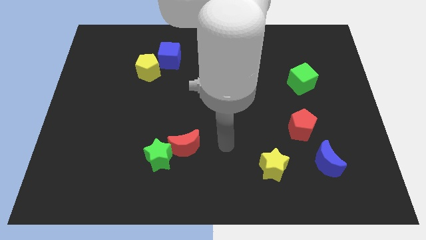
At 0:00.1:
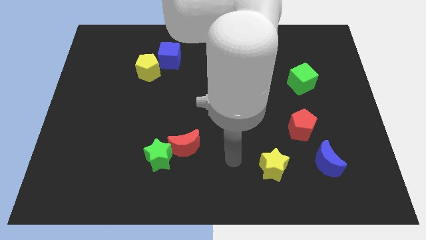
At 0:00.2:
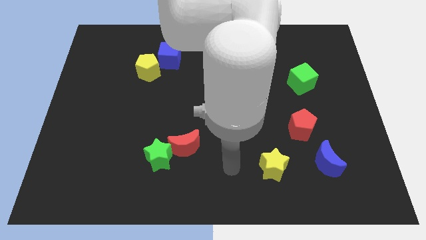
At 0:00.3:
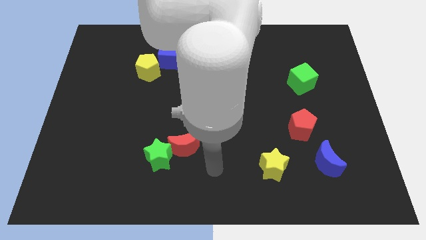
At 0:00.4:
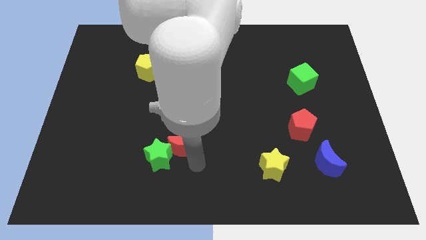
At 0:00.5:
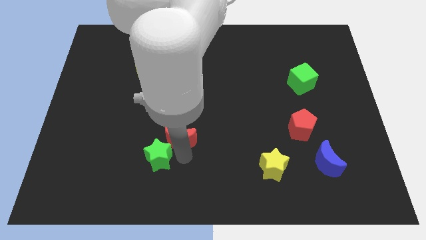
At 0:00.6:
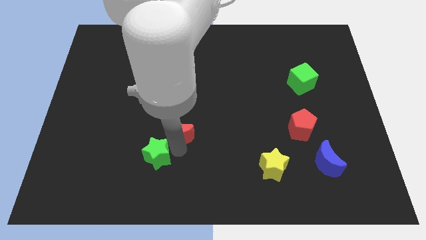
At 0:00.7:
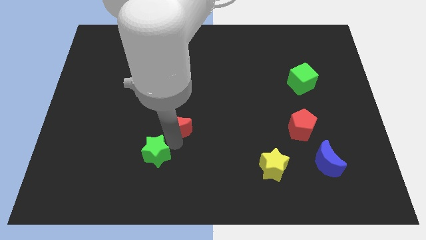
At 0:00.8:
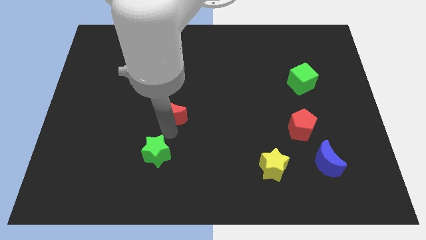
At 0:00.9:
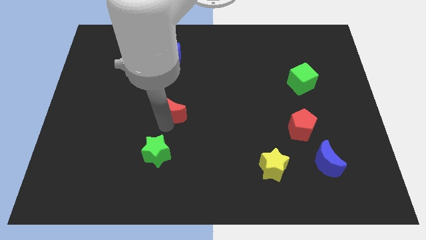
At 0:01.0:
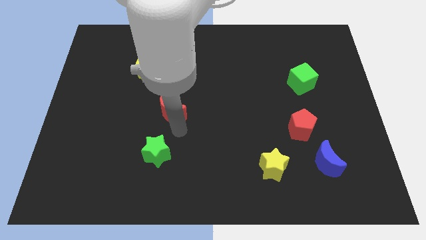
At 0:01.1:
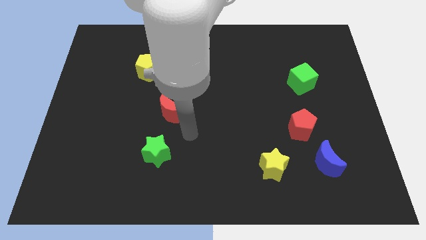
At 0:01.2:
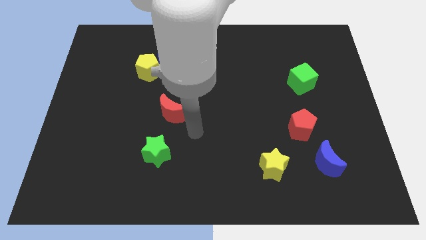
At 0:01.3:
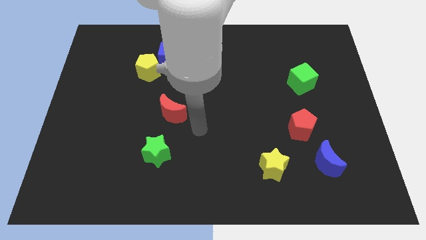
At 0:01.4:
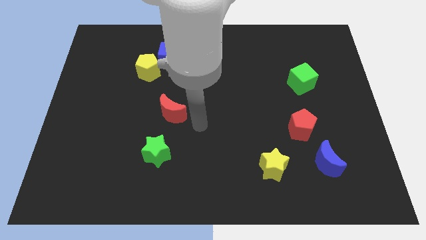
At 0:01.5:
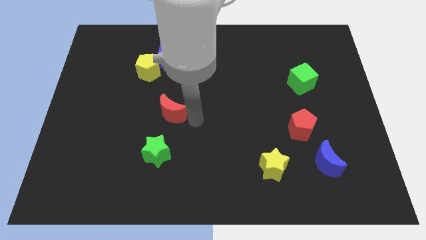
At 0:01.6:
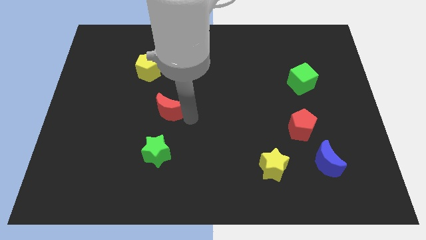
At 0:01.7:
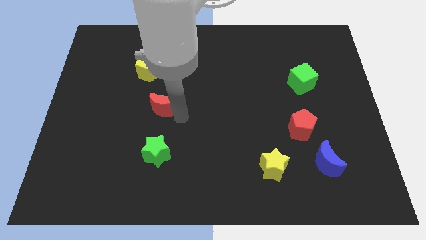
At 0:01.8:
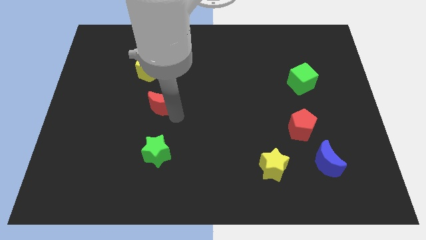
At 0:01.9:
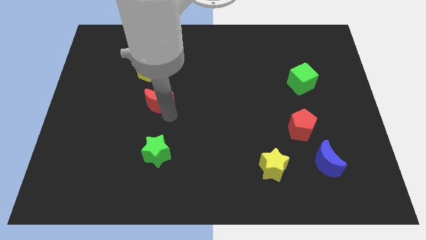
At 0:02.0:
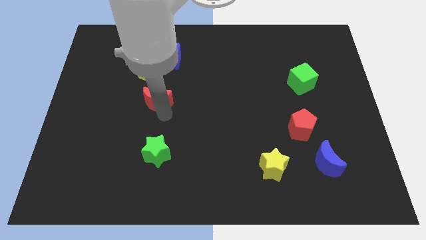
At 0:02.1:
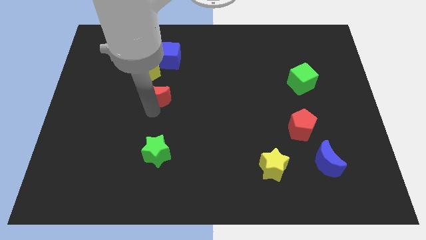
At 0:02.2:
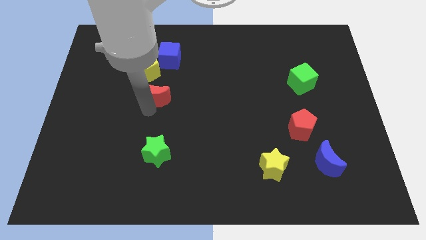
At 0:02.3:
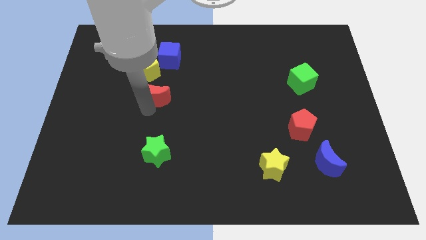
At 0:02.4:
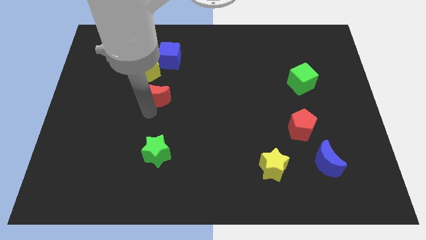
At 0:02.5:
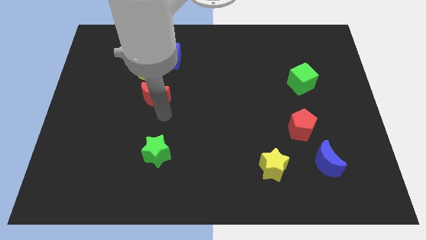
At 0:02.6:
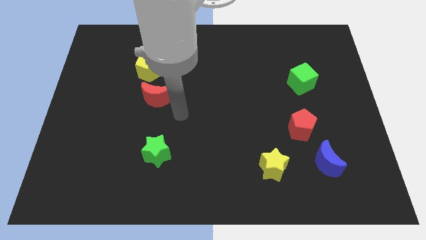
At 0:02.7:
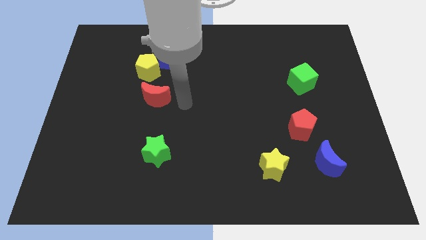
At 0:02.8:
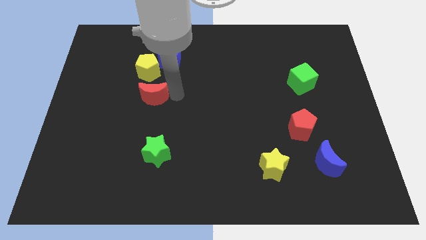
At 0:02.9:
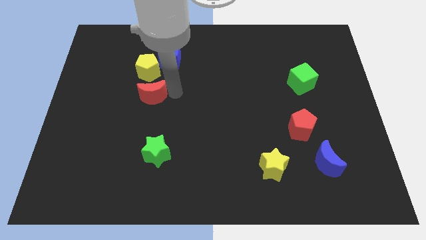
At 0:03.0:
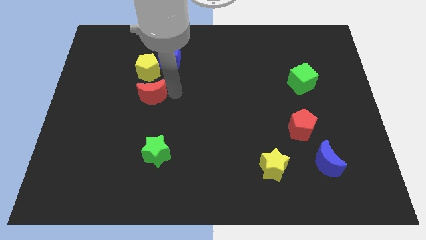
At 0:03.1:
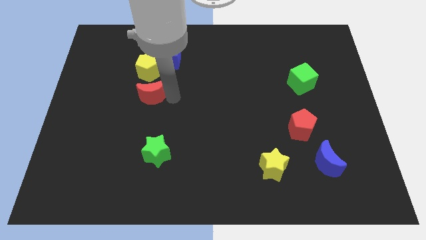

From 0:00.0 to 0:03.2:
move the red crescent to the bottom of the yellow pentagon

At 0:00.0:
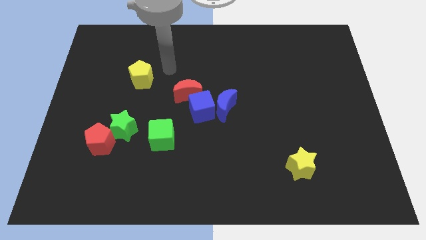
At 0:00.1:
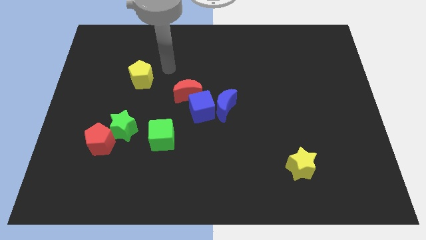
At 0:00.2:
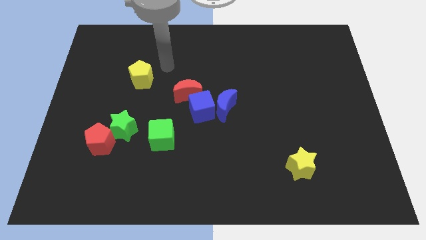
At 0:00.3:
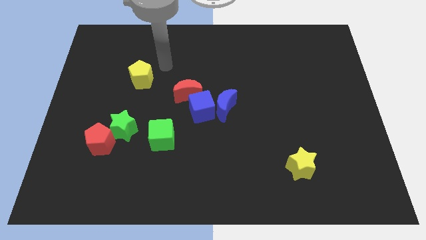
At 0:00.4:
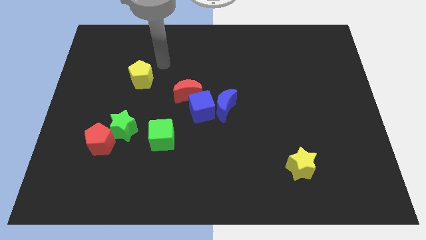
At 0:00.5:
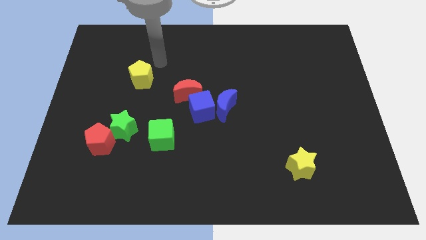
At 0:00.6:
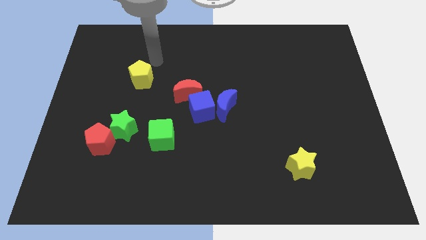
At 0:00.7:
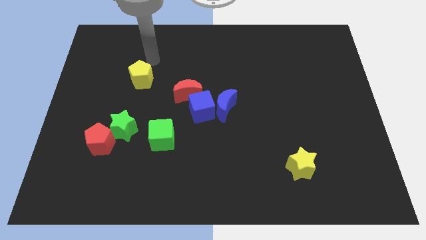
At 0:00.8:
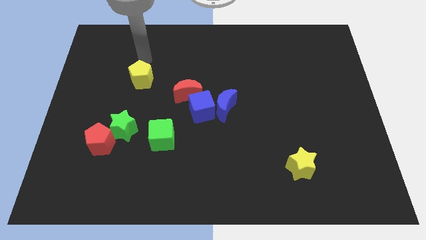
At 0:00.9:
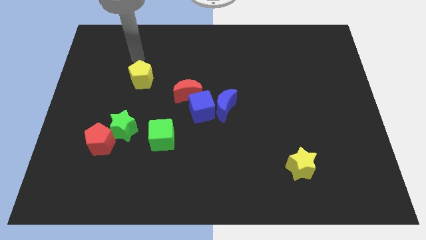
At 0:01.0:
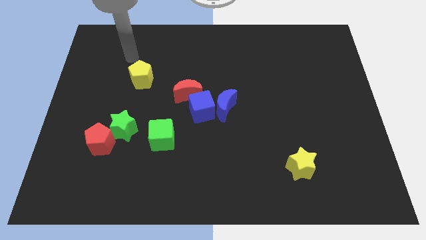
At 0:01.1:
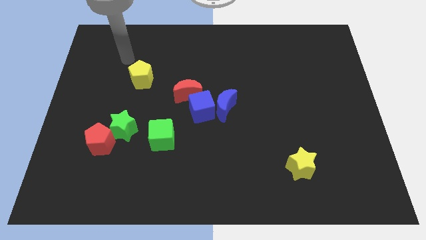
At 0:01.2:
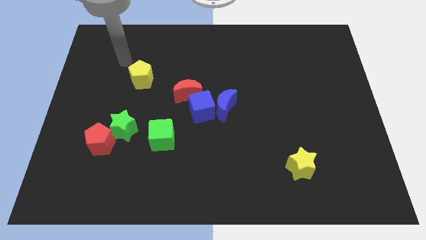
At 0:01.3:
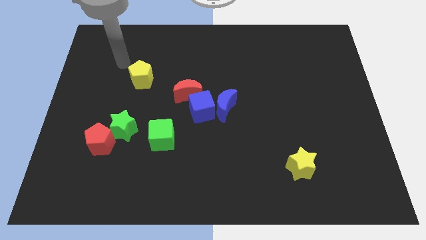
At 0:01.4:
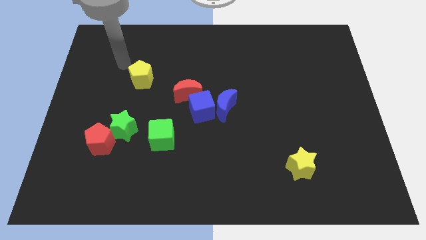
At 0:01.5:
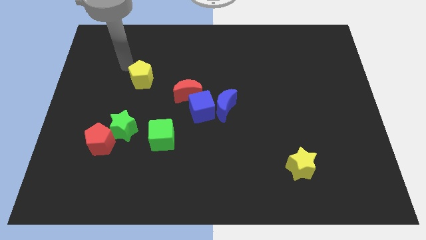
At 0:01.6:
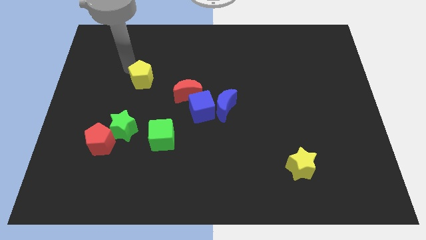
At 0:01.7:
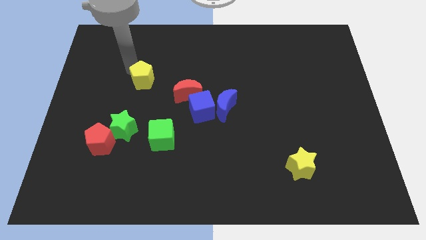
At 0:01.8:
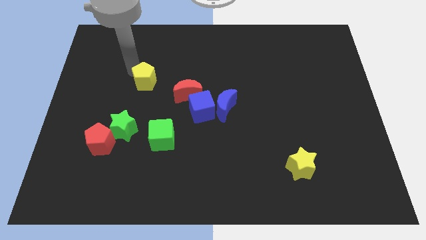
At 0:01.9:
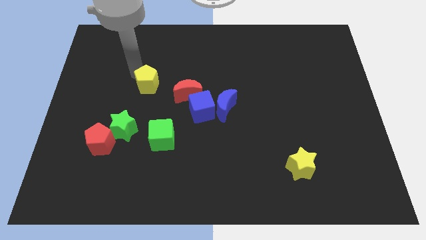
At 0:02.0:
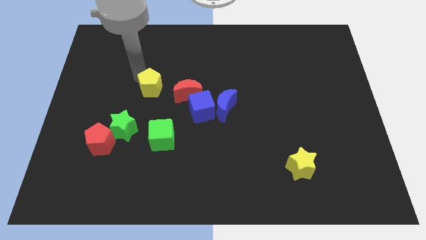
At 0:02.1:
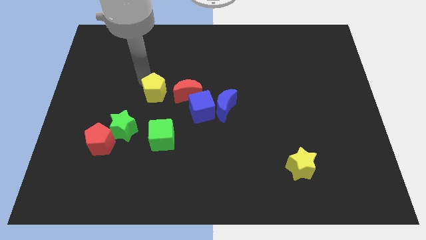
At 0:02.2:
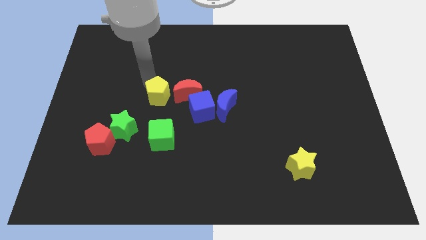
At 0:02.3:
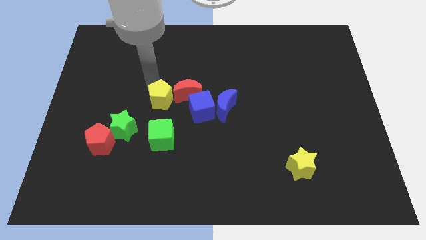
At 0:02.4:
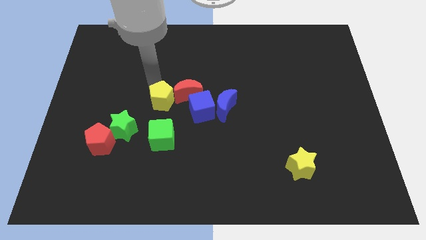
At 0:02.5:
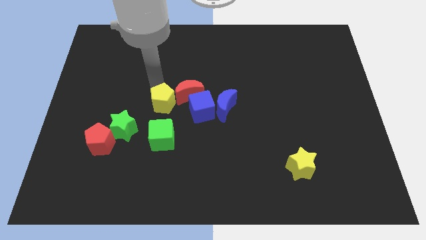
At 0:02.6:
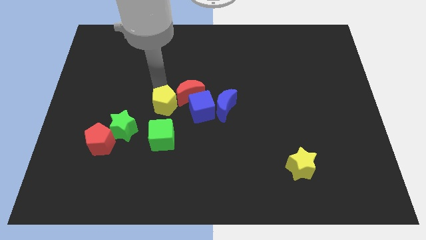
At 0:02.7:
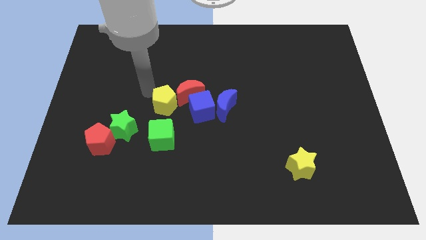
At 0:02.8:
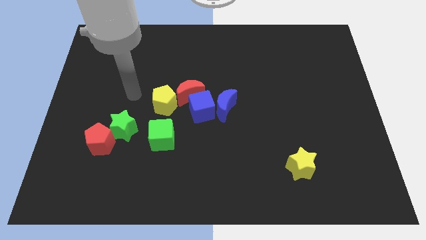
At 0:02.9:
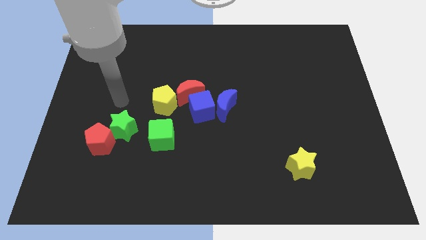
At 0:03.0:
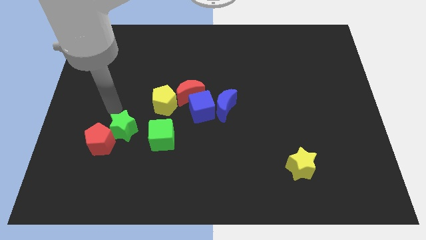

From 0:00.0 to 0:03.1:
slide yellow pentagon on top of green cube

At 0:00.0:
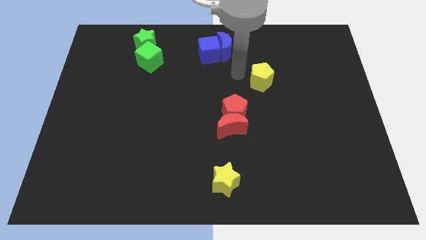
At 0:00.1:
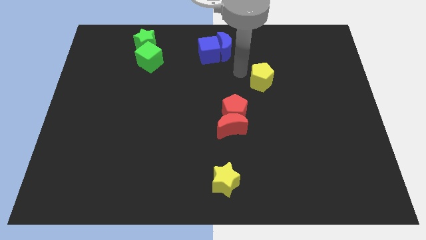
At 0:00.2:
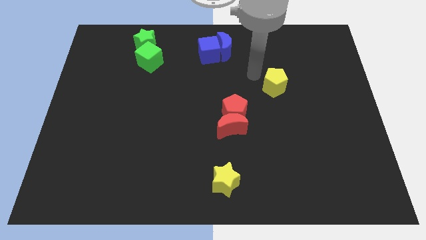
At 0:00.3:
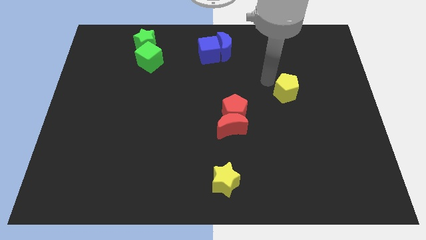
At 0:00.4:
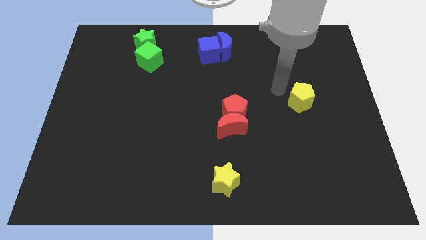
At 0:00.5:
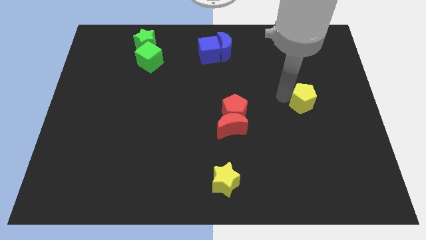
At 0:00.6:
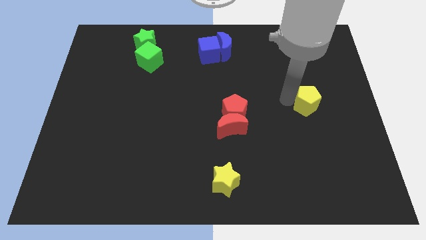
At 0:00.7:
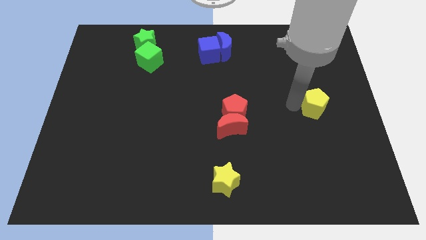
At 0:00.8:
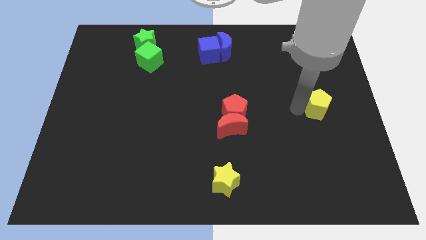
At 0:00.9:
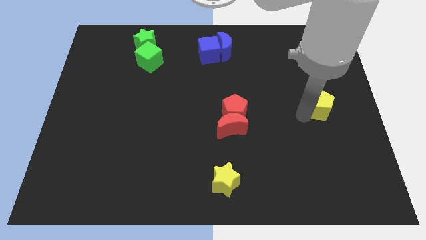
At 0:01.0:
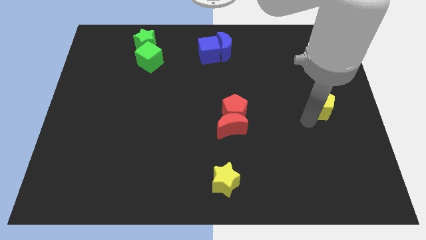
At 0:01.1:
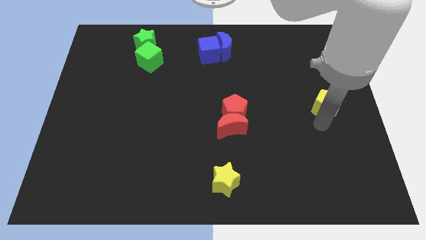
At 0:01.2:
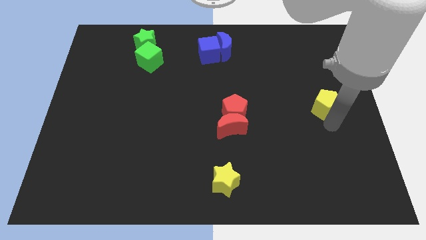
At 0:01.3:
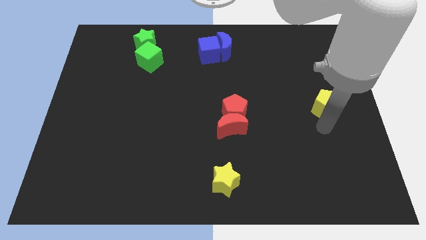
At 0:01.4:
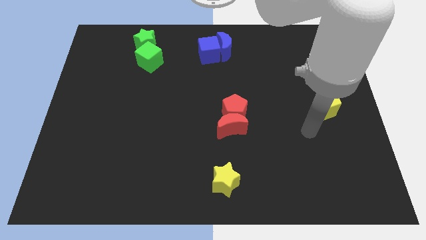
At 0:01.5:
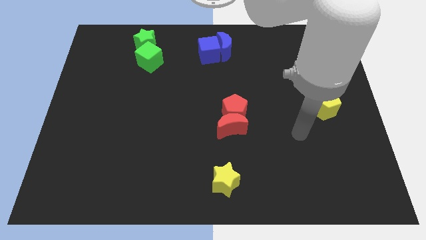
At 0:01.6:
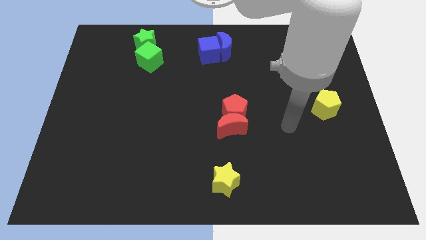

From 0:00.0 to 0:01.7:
move the yellow pentagon to the center right

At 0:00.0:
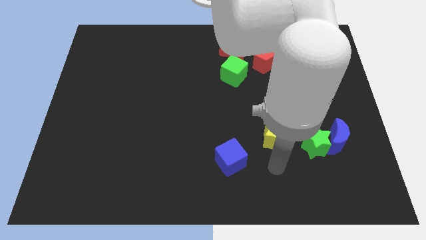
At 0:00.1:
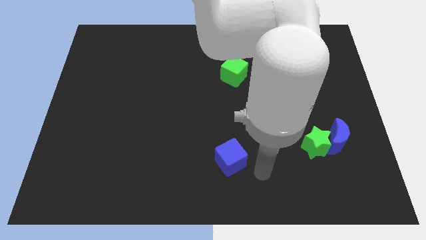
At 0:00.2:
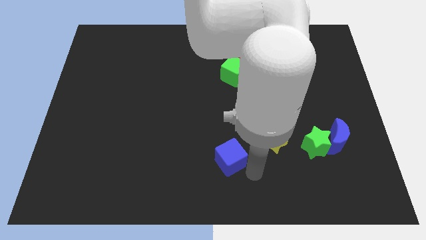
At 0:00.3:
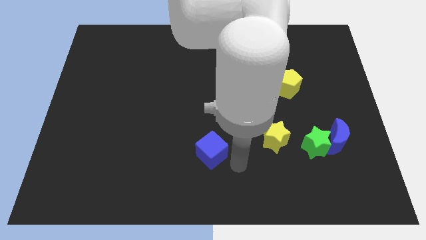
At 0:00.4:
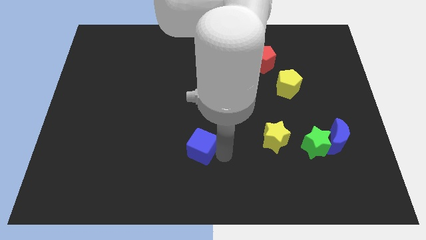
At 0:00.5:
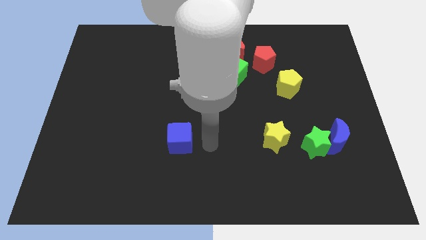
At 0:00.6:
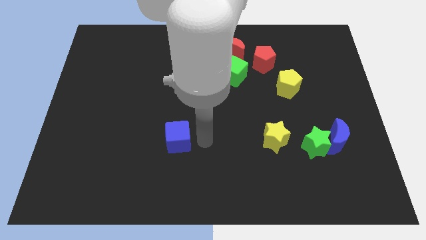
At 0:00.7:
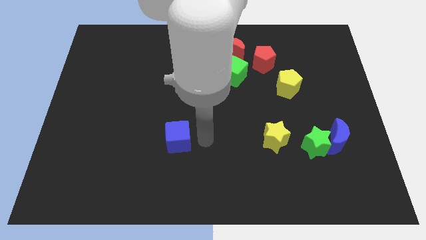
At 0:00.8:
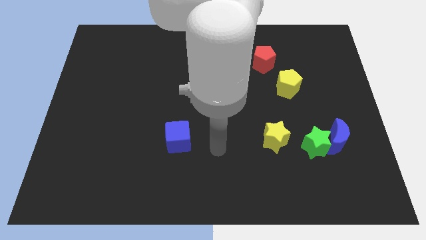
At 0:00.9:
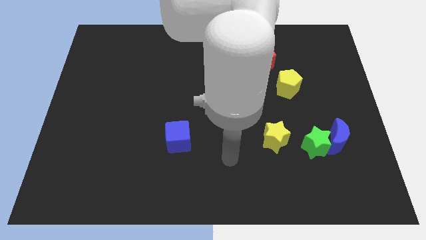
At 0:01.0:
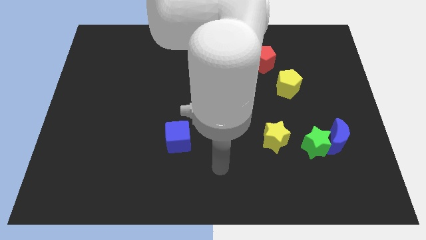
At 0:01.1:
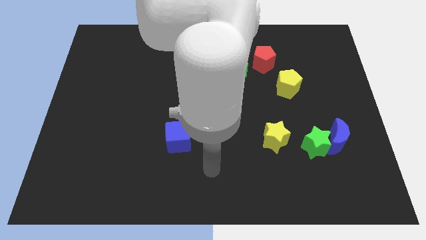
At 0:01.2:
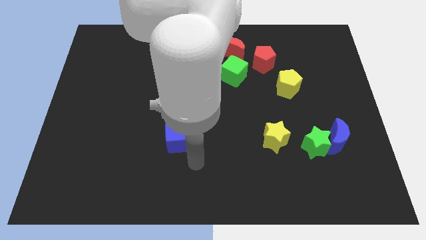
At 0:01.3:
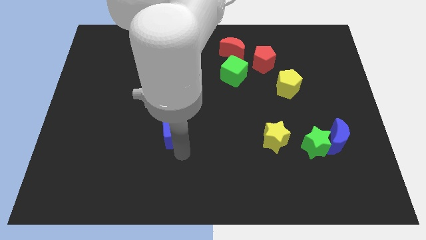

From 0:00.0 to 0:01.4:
move the blue cube to the bottom left of the green cube
